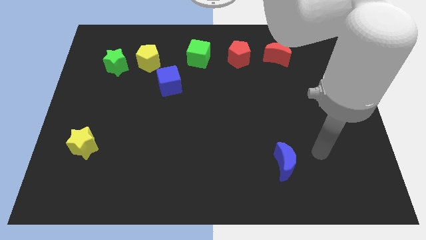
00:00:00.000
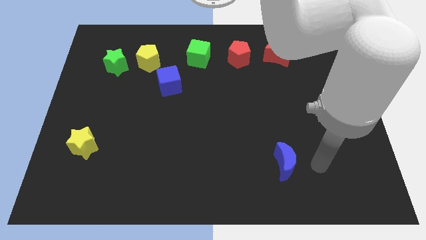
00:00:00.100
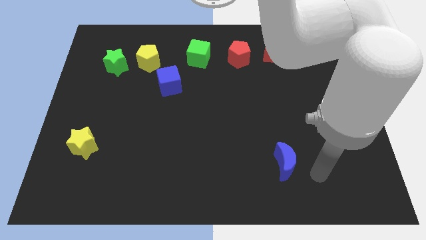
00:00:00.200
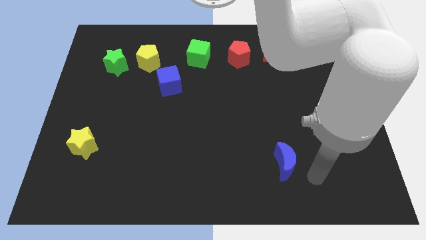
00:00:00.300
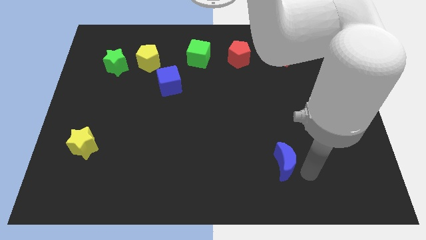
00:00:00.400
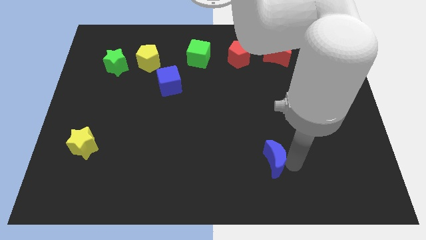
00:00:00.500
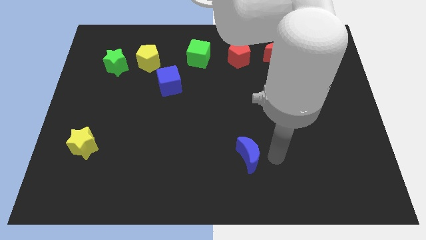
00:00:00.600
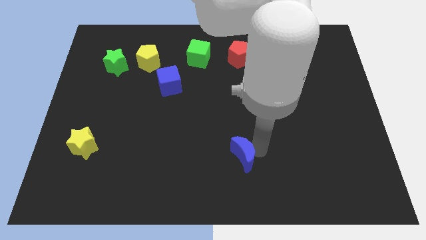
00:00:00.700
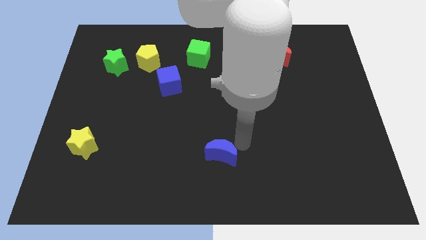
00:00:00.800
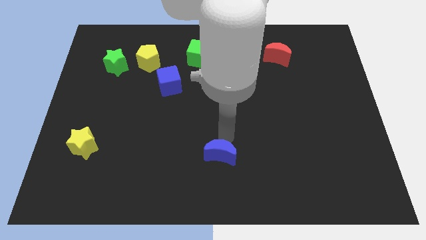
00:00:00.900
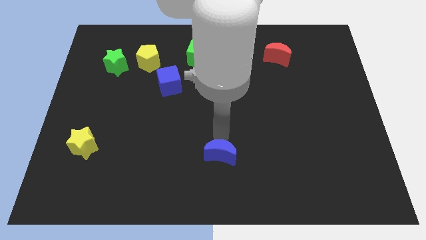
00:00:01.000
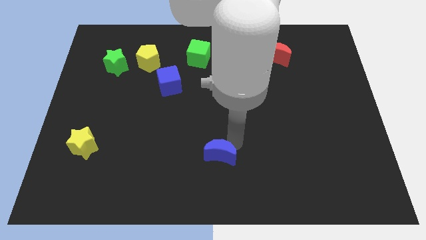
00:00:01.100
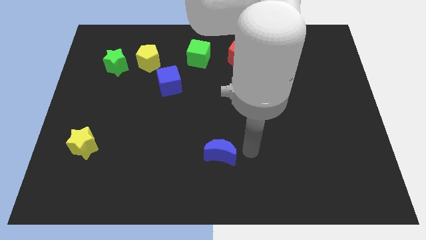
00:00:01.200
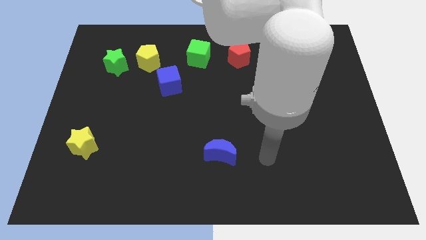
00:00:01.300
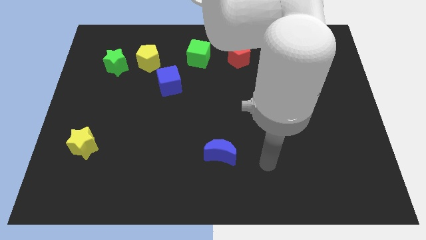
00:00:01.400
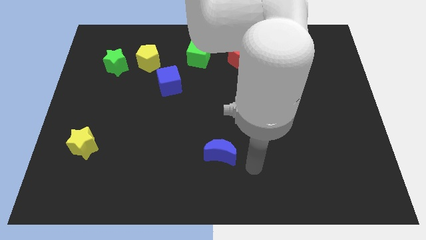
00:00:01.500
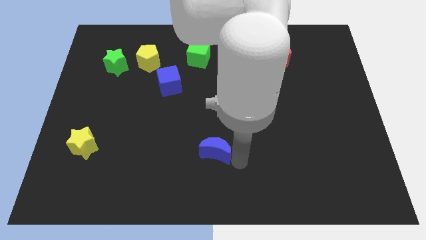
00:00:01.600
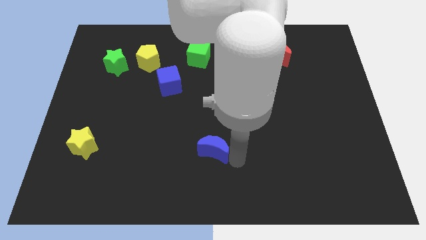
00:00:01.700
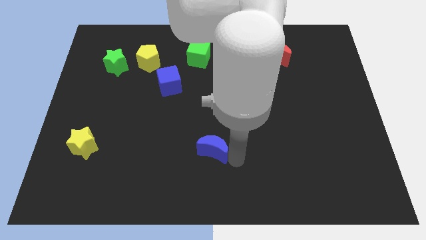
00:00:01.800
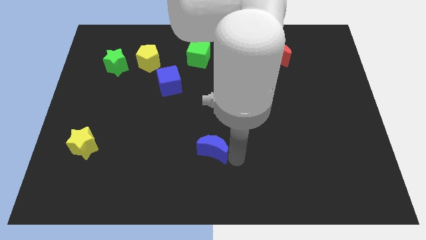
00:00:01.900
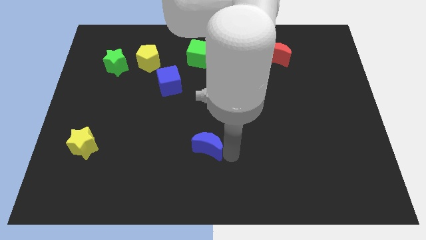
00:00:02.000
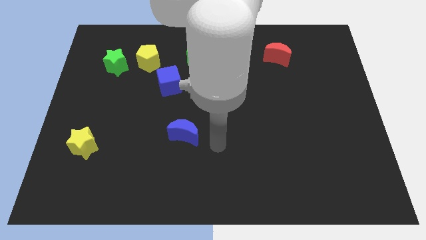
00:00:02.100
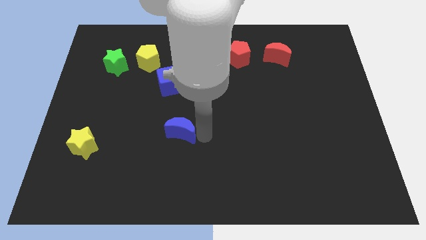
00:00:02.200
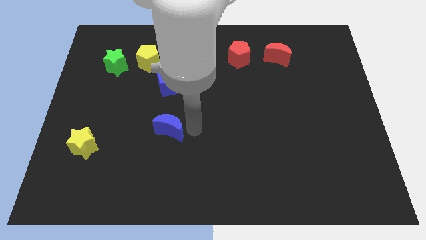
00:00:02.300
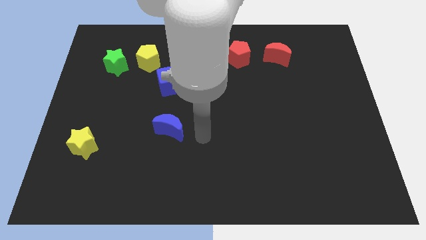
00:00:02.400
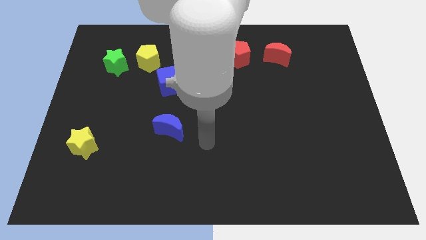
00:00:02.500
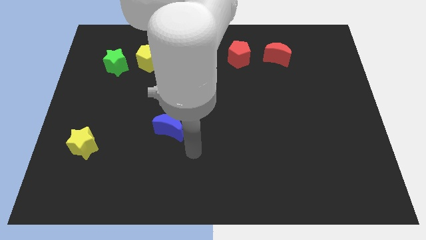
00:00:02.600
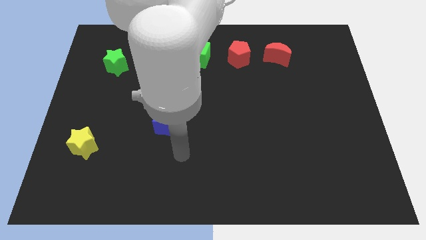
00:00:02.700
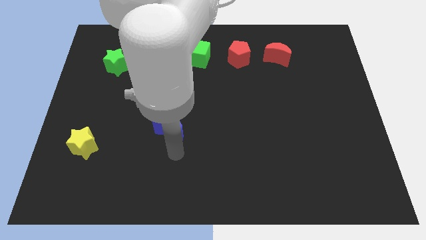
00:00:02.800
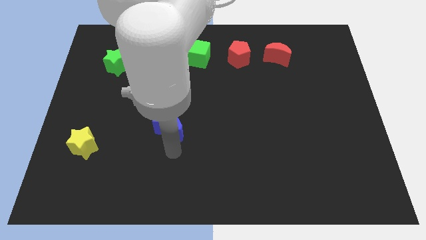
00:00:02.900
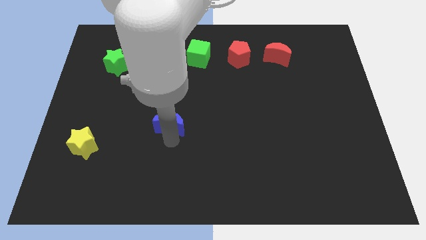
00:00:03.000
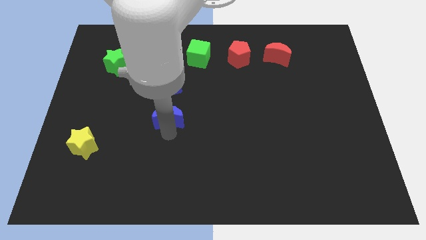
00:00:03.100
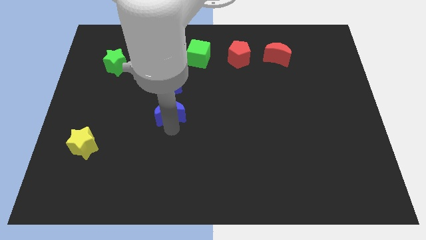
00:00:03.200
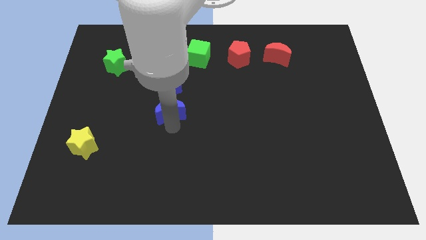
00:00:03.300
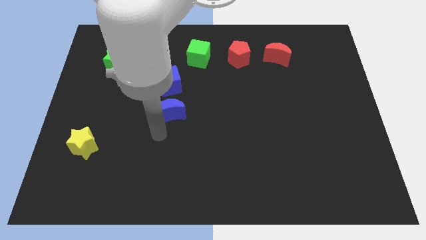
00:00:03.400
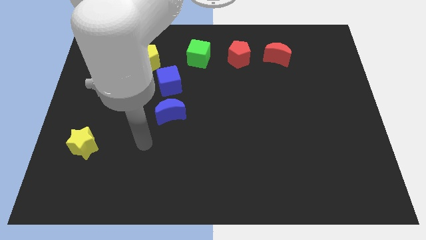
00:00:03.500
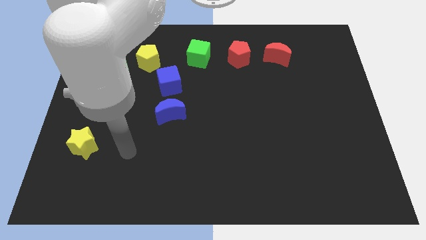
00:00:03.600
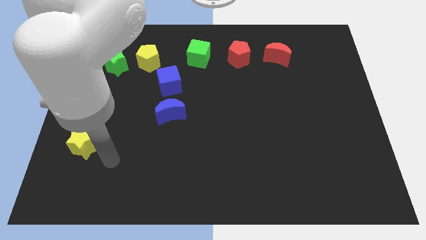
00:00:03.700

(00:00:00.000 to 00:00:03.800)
move the blue moon to the bottom side of the blue cube

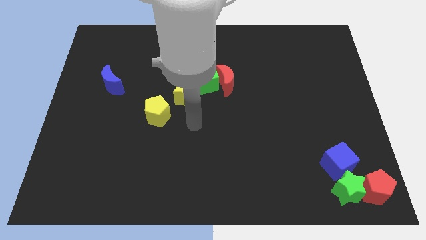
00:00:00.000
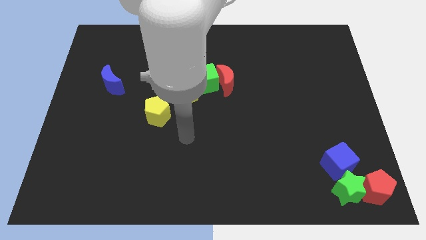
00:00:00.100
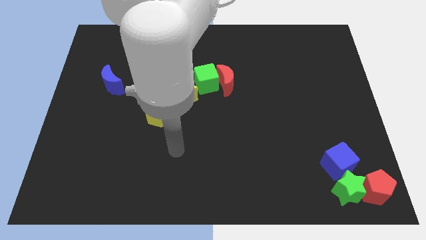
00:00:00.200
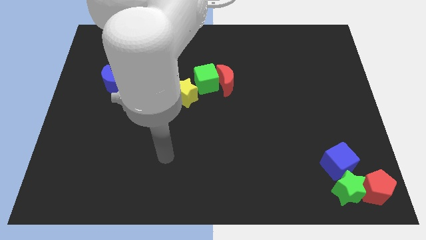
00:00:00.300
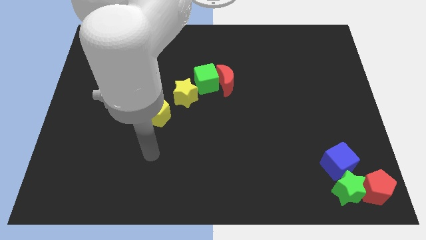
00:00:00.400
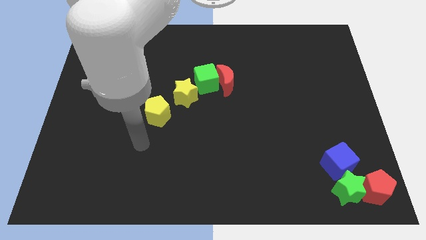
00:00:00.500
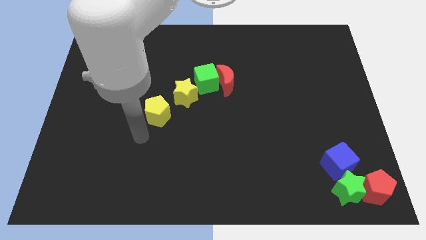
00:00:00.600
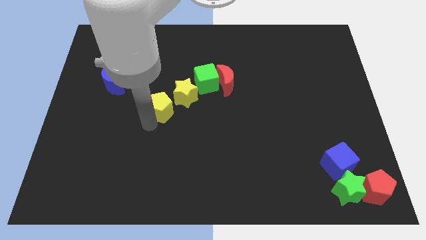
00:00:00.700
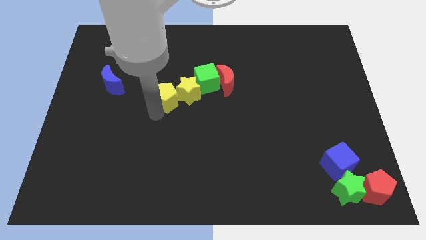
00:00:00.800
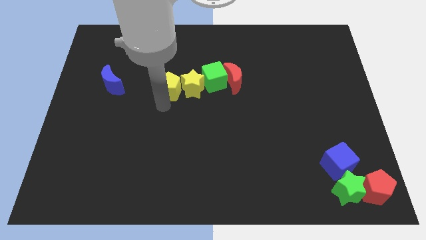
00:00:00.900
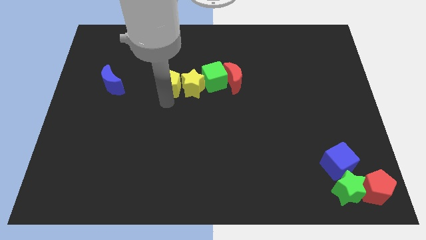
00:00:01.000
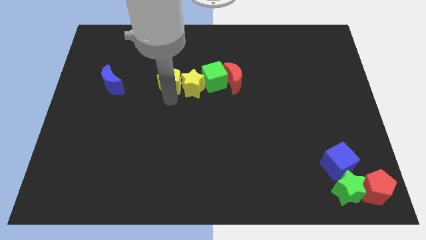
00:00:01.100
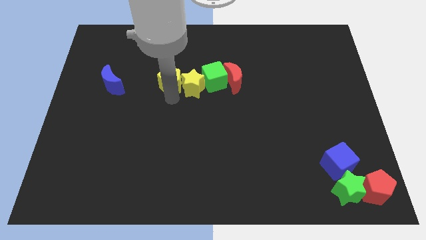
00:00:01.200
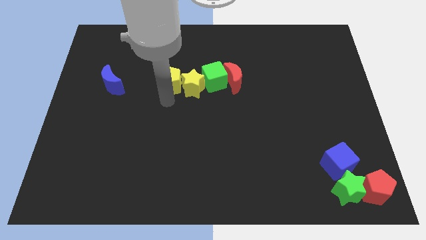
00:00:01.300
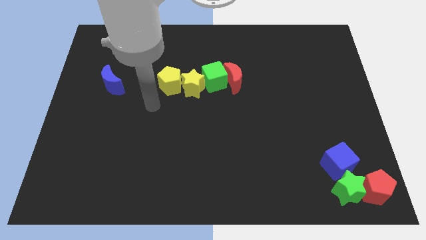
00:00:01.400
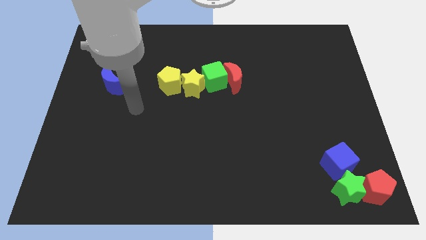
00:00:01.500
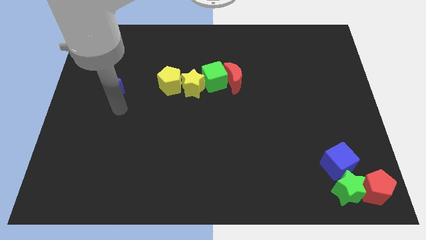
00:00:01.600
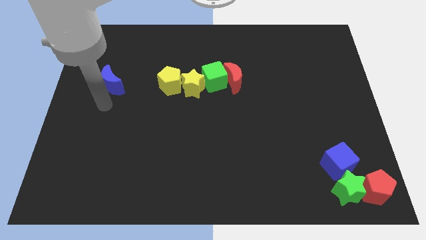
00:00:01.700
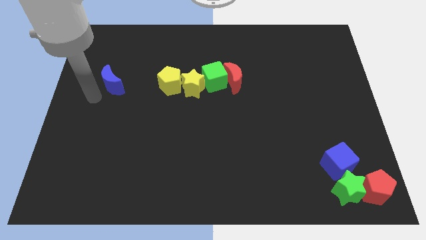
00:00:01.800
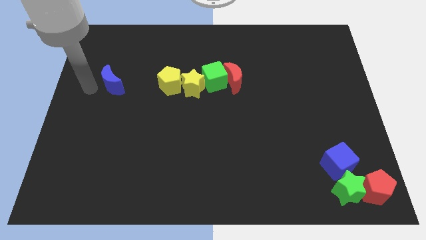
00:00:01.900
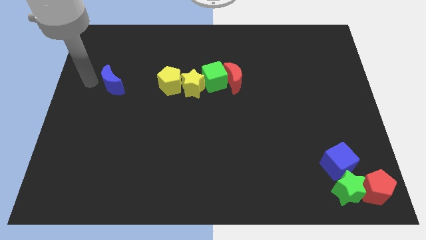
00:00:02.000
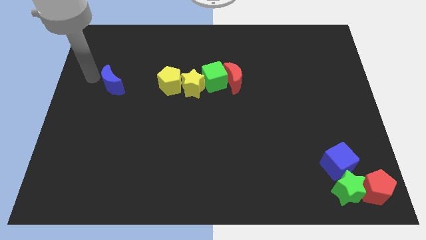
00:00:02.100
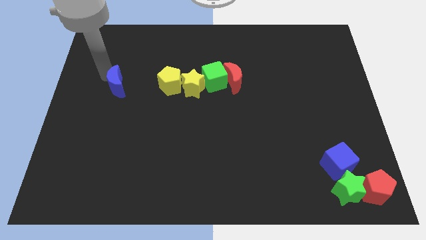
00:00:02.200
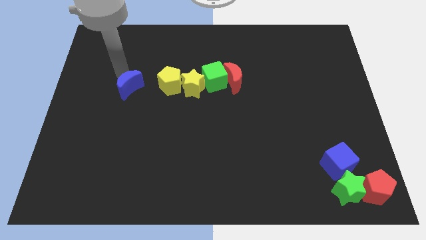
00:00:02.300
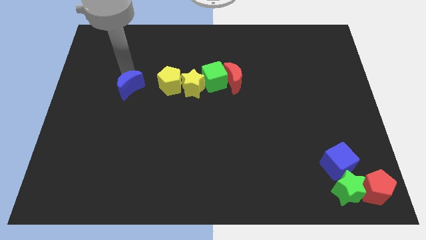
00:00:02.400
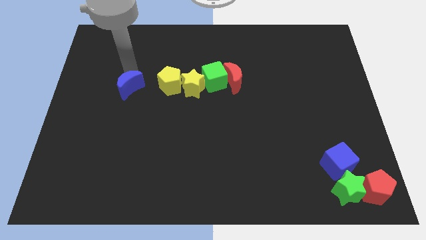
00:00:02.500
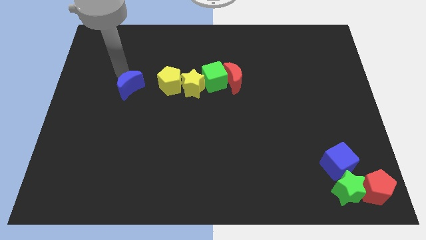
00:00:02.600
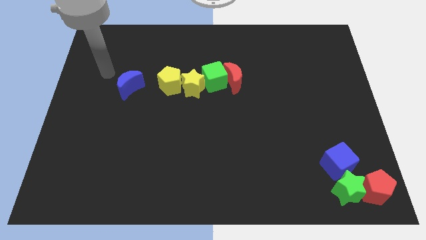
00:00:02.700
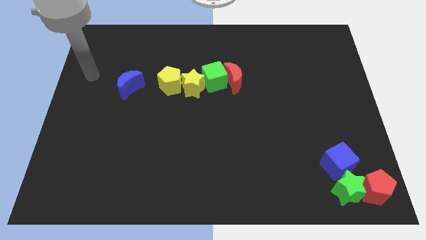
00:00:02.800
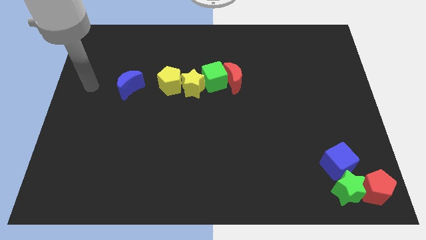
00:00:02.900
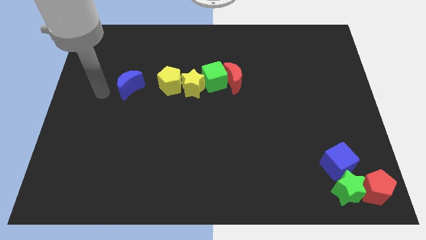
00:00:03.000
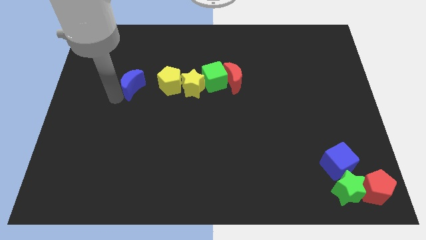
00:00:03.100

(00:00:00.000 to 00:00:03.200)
slightly move the yellow pentagon and blue moon to the right side

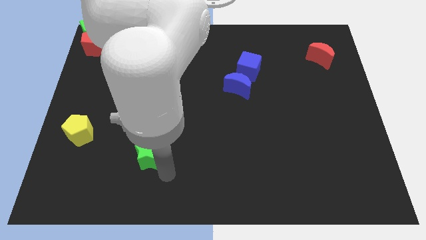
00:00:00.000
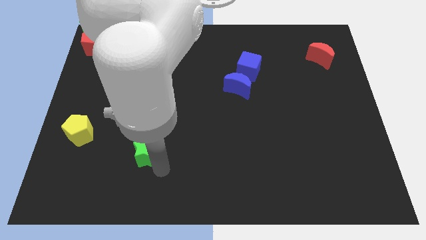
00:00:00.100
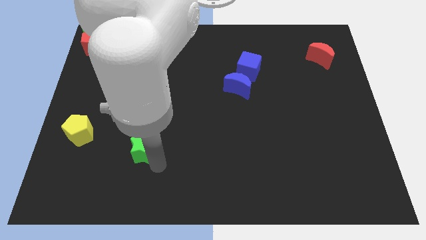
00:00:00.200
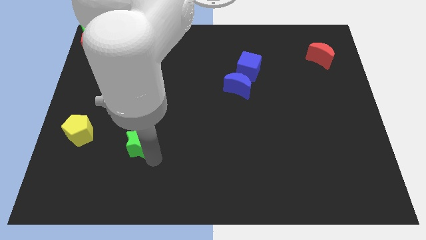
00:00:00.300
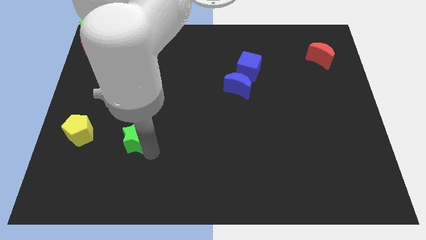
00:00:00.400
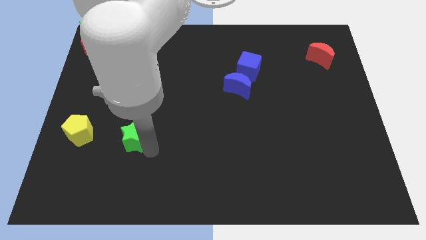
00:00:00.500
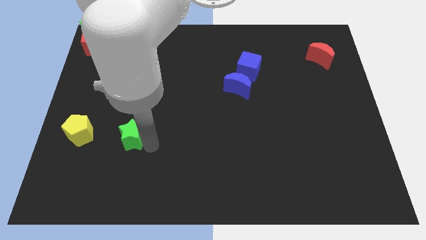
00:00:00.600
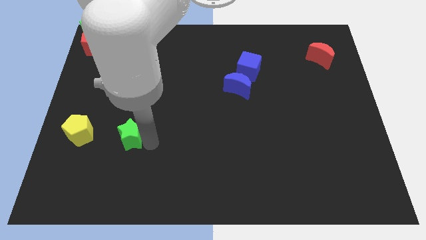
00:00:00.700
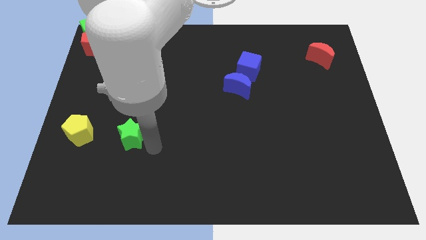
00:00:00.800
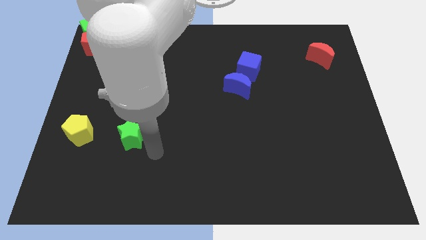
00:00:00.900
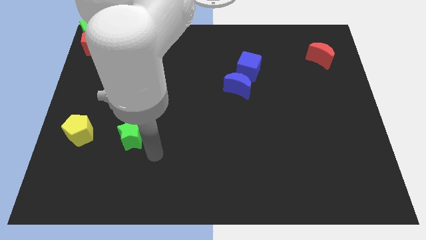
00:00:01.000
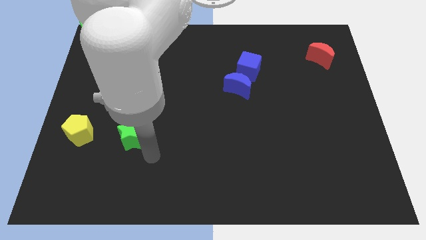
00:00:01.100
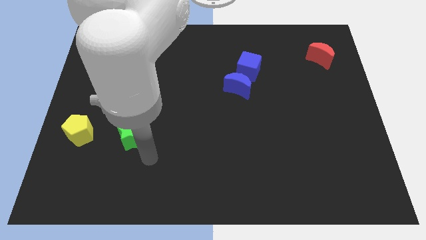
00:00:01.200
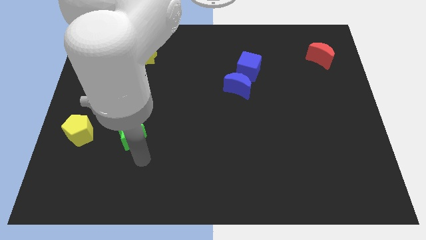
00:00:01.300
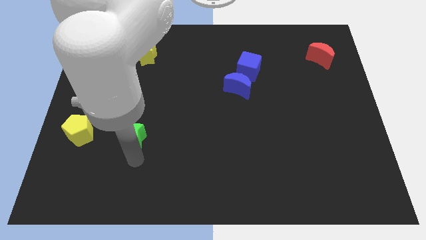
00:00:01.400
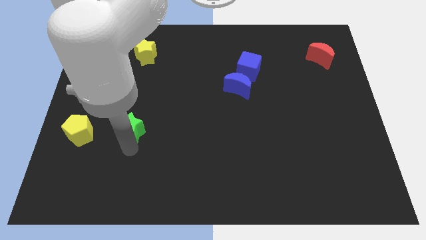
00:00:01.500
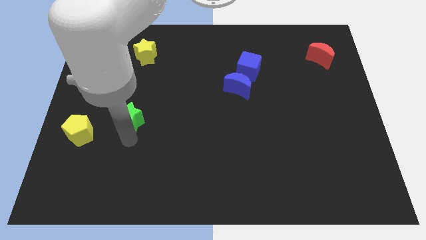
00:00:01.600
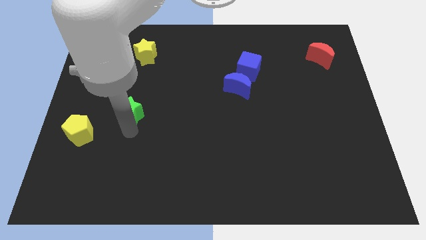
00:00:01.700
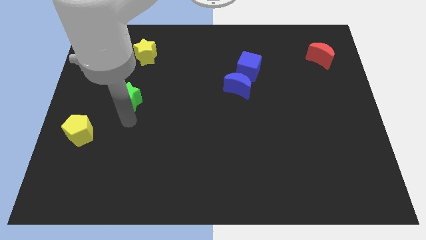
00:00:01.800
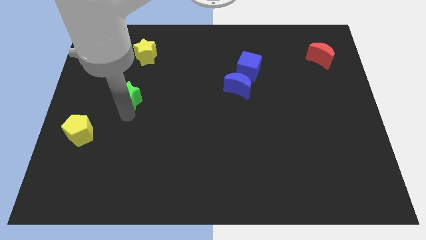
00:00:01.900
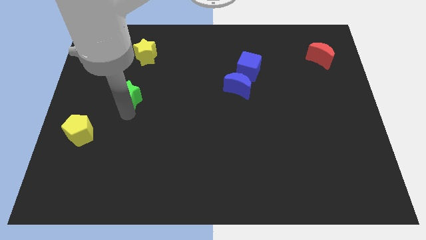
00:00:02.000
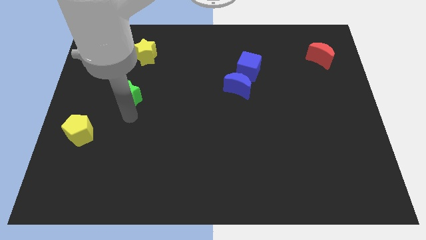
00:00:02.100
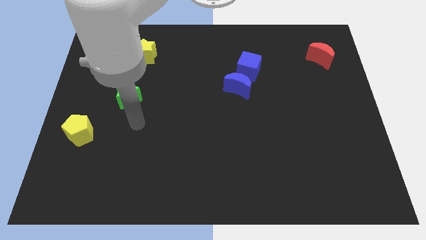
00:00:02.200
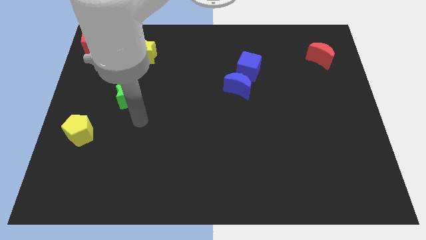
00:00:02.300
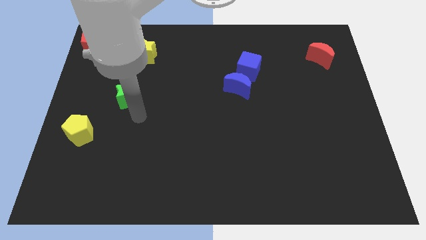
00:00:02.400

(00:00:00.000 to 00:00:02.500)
move the green star betweem yellow star and yellow pentagon
